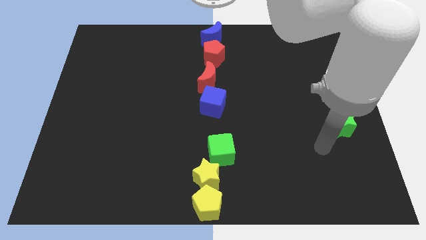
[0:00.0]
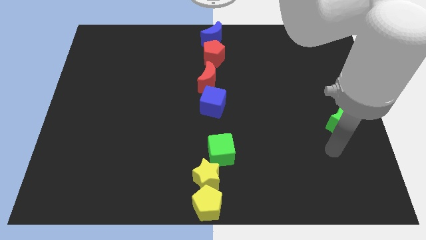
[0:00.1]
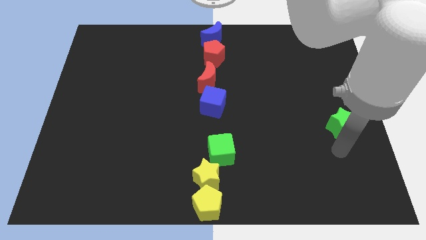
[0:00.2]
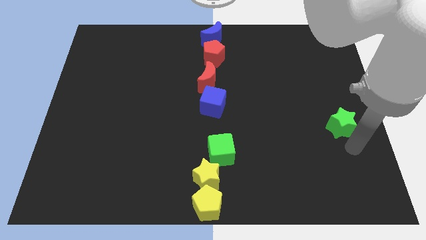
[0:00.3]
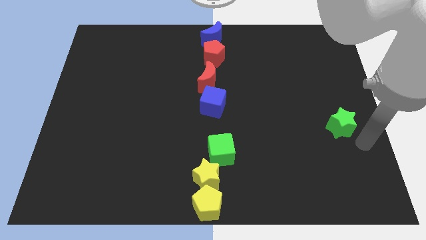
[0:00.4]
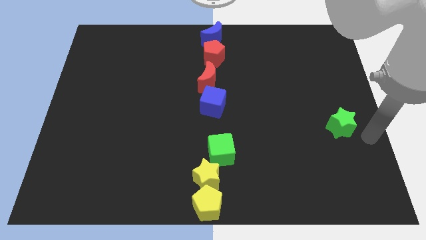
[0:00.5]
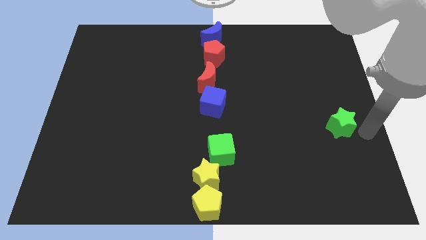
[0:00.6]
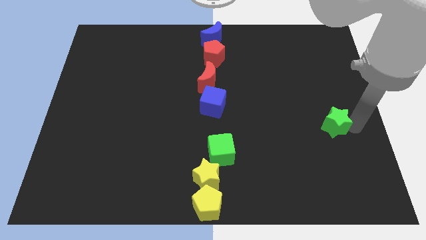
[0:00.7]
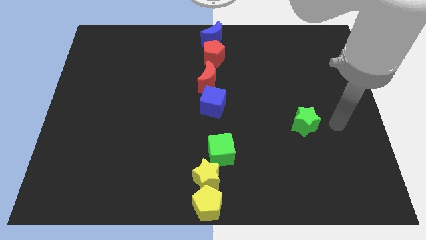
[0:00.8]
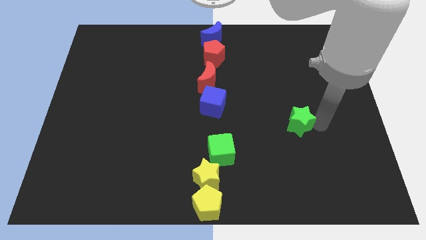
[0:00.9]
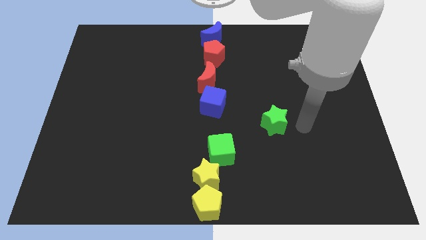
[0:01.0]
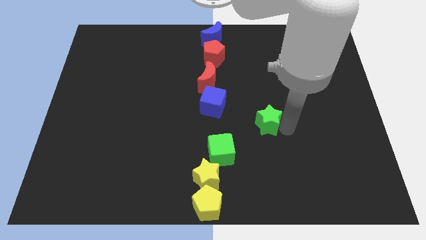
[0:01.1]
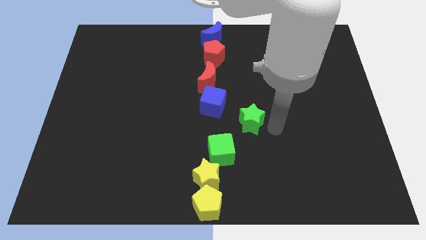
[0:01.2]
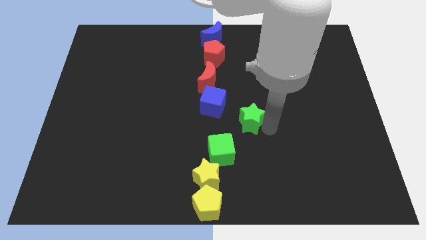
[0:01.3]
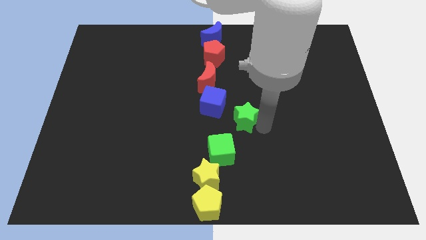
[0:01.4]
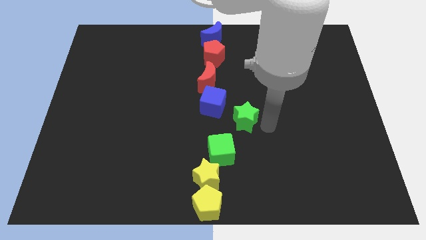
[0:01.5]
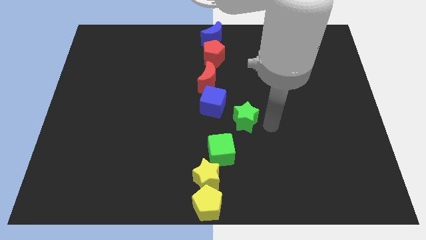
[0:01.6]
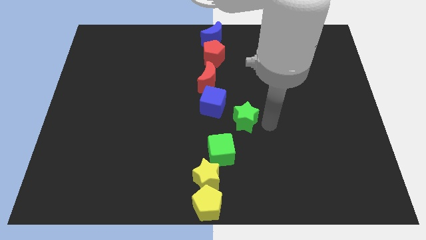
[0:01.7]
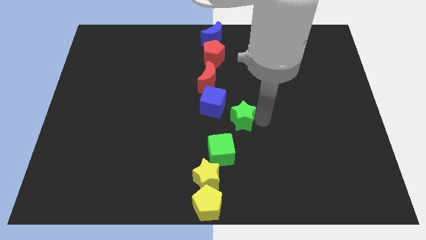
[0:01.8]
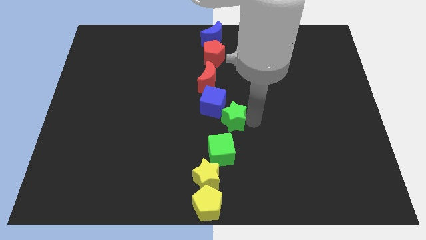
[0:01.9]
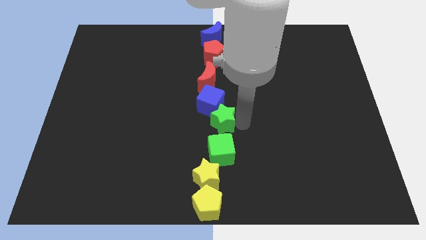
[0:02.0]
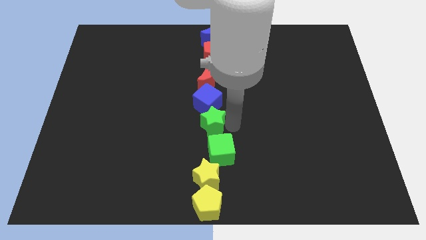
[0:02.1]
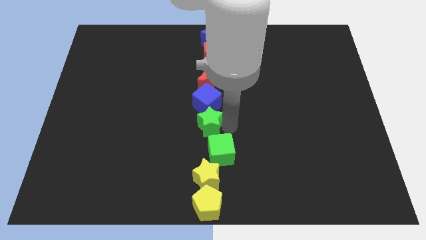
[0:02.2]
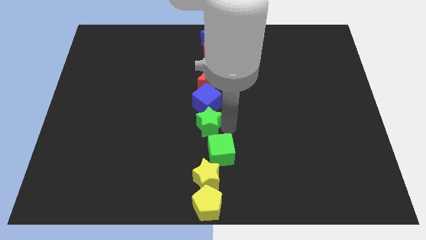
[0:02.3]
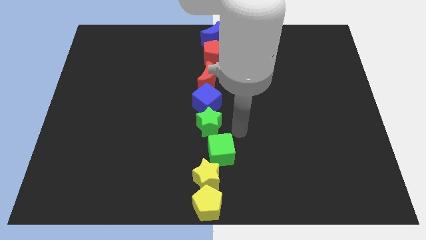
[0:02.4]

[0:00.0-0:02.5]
place green star below blue cube

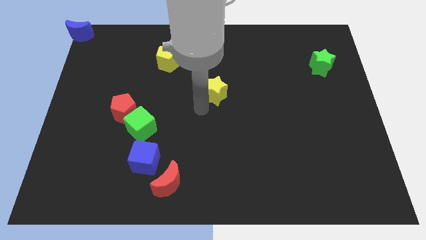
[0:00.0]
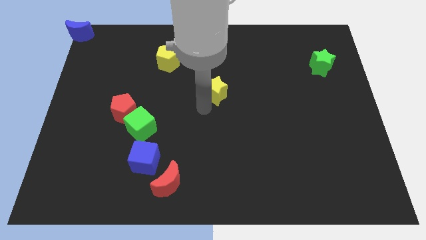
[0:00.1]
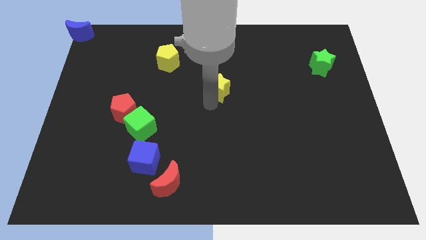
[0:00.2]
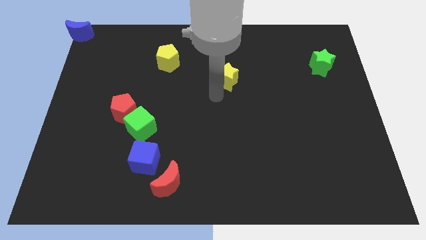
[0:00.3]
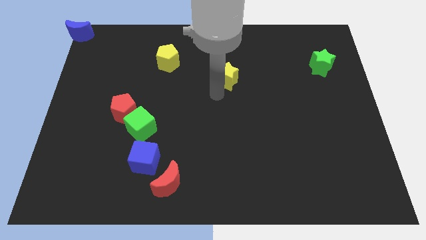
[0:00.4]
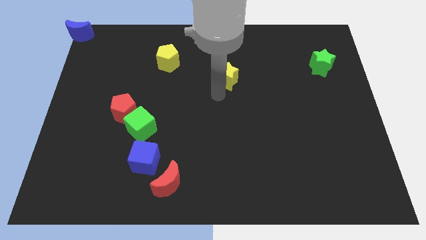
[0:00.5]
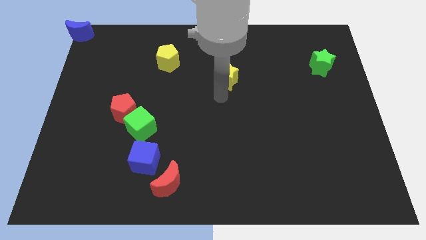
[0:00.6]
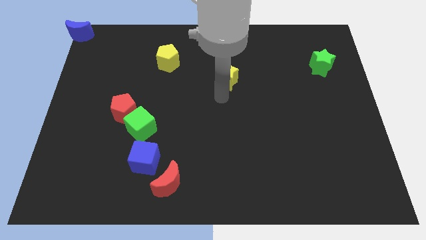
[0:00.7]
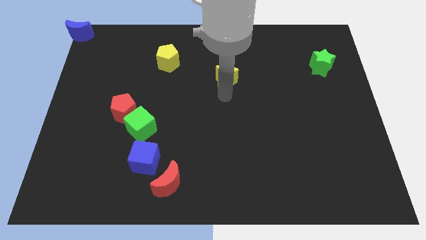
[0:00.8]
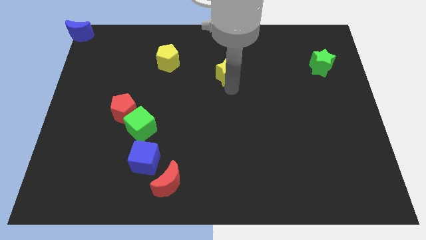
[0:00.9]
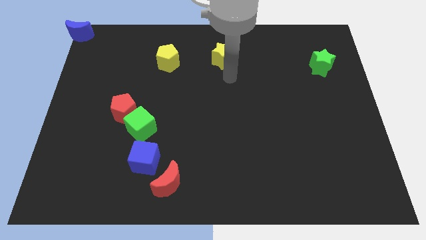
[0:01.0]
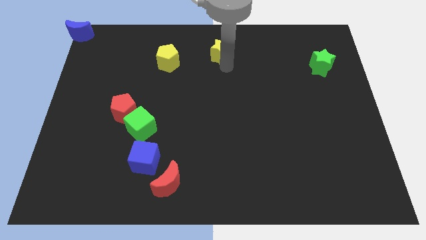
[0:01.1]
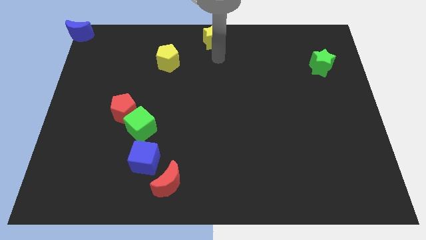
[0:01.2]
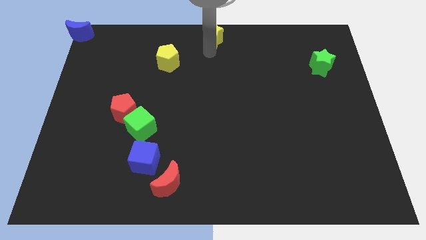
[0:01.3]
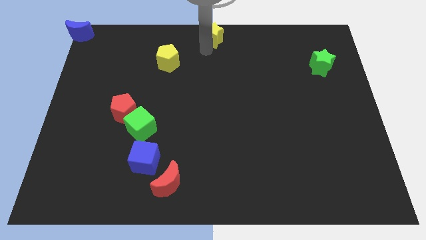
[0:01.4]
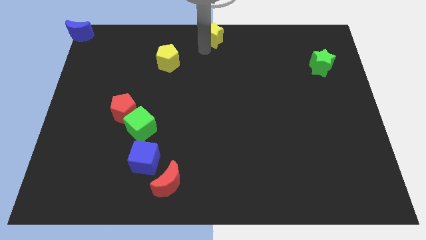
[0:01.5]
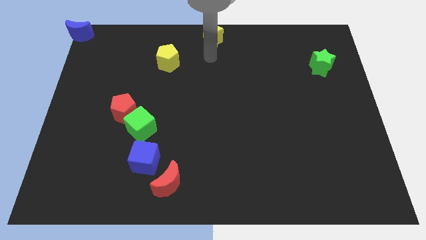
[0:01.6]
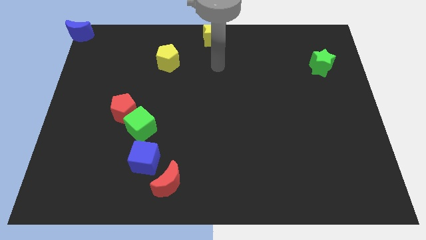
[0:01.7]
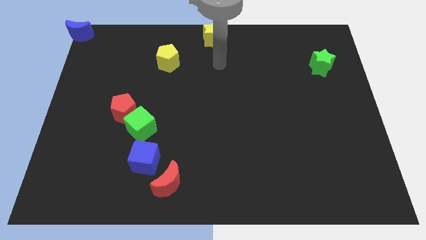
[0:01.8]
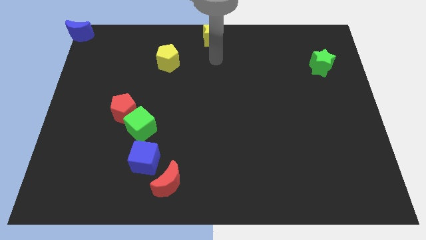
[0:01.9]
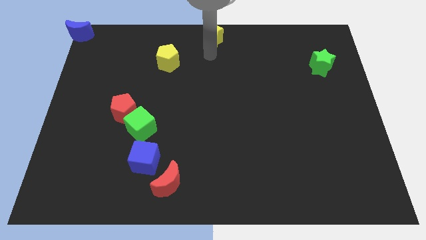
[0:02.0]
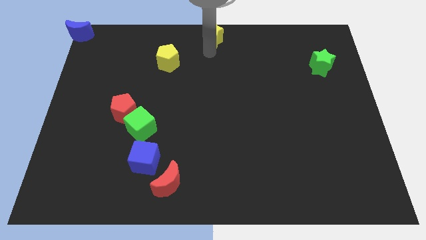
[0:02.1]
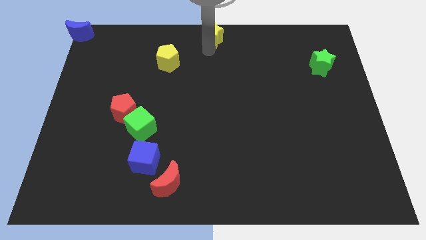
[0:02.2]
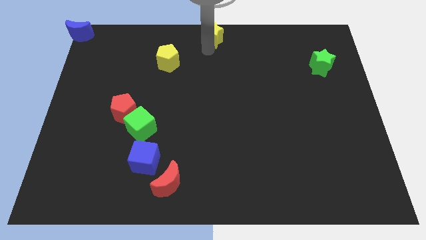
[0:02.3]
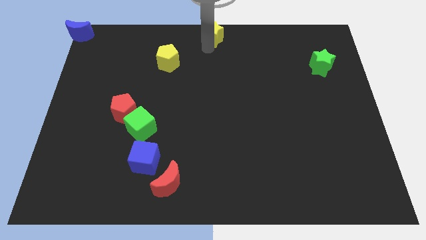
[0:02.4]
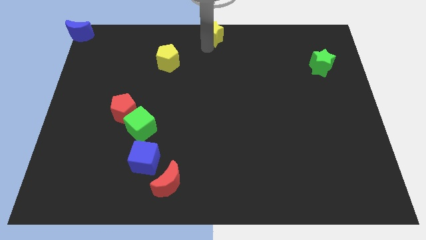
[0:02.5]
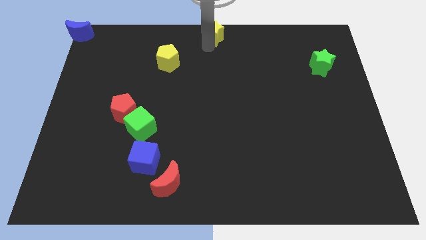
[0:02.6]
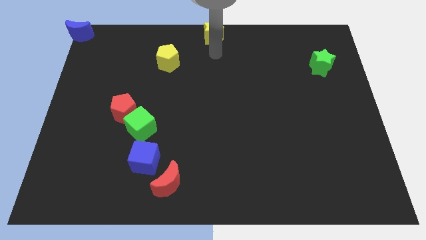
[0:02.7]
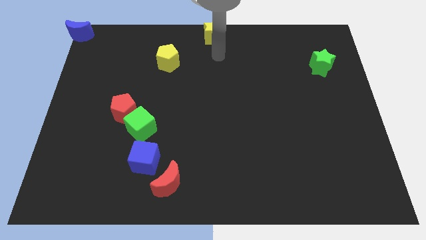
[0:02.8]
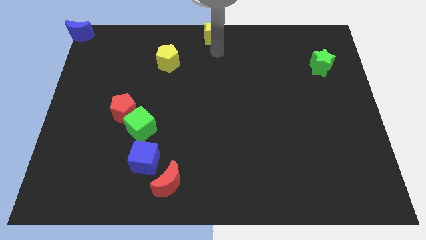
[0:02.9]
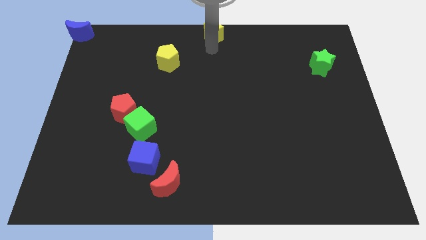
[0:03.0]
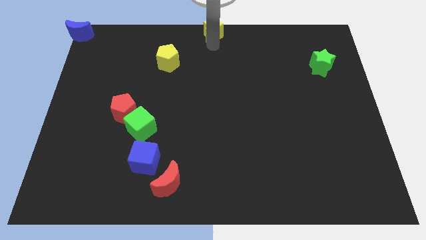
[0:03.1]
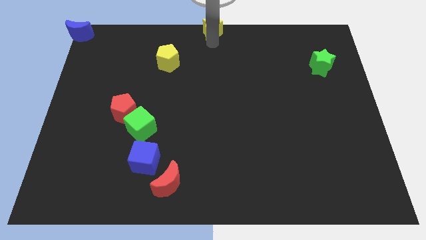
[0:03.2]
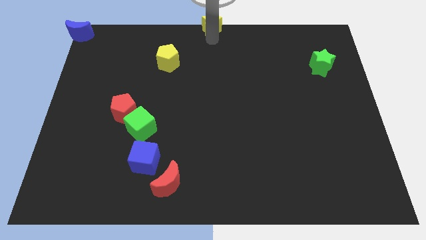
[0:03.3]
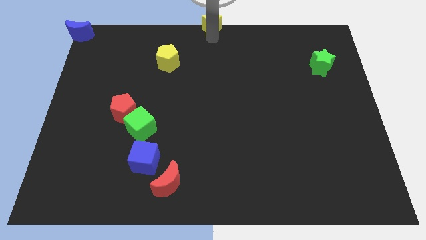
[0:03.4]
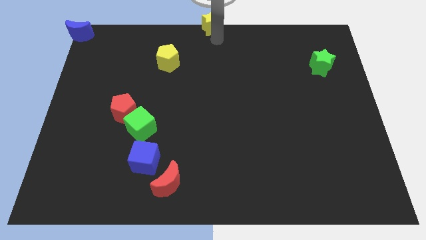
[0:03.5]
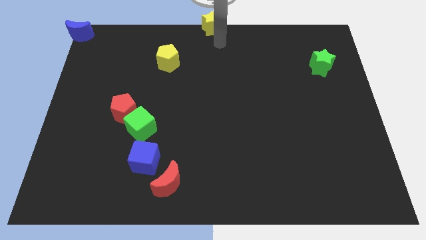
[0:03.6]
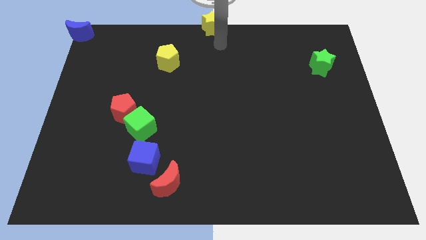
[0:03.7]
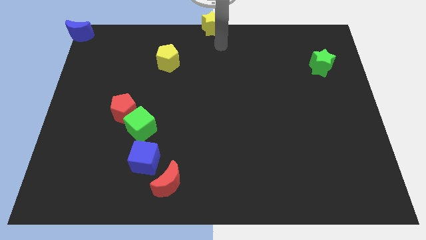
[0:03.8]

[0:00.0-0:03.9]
put the yellow star at the top center of the board

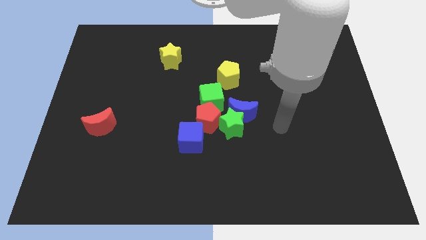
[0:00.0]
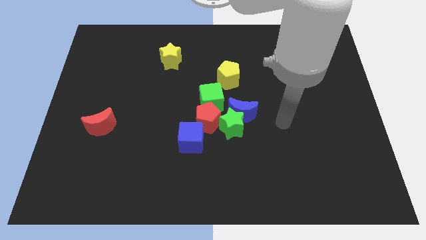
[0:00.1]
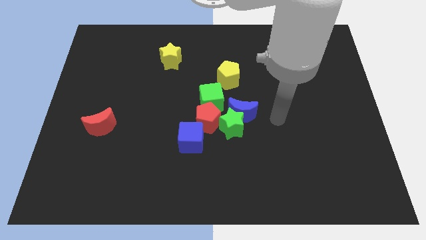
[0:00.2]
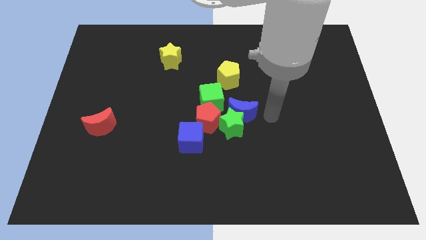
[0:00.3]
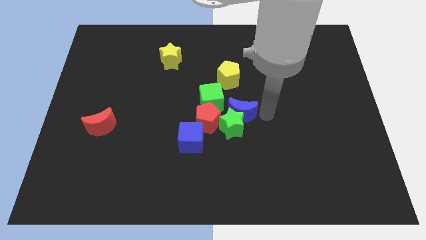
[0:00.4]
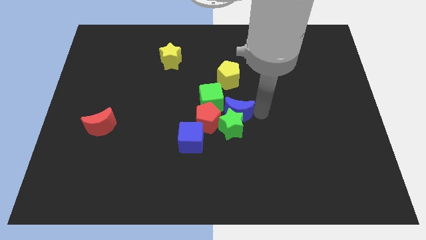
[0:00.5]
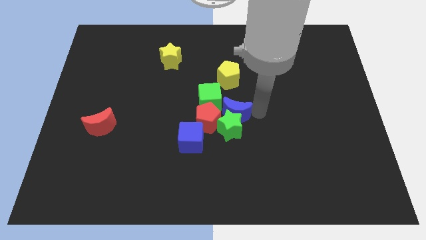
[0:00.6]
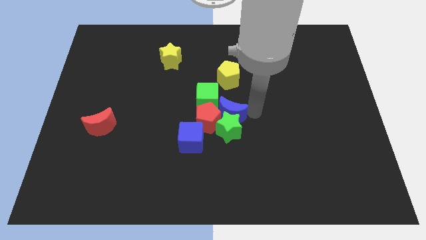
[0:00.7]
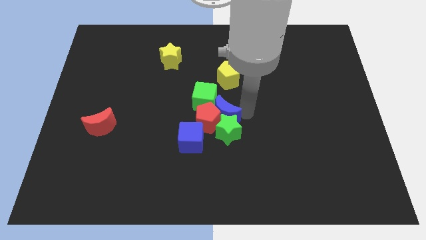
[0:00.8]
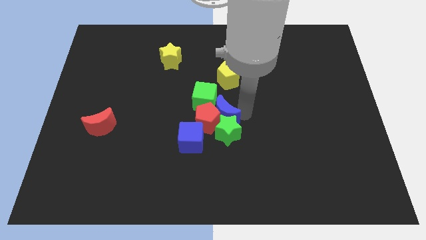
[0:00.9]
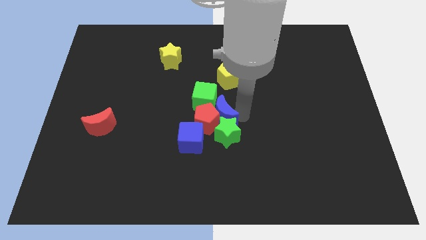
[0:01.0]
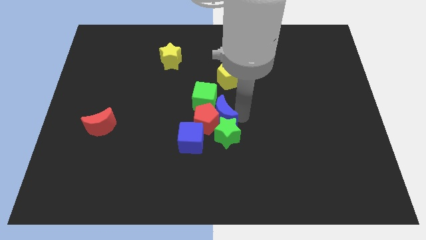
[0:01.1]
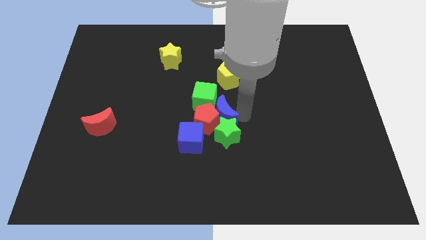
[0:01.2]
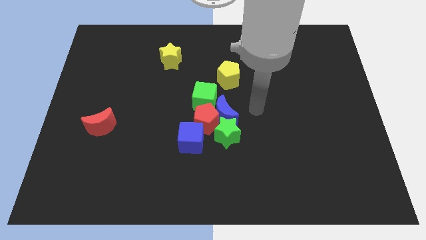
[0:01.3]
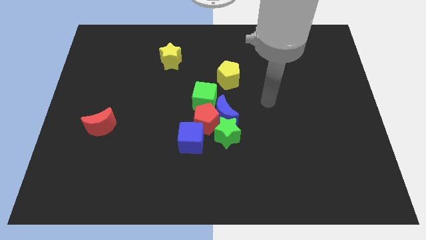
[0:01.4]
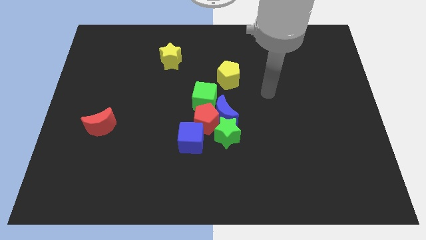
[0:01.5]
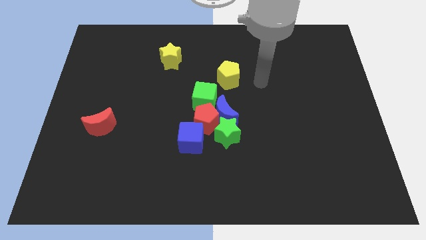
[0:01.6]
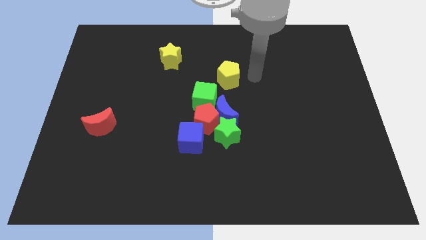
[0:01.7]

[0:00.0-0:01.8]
push the blue crescent into the center

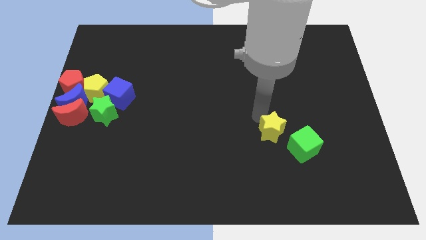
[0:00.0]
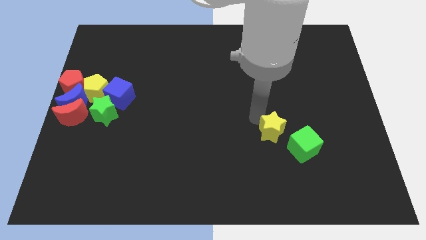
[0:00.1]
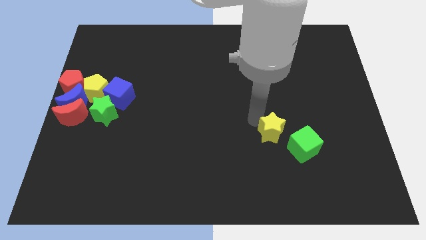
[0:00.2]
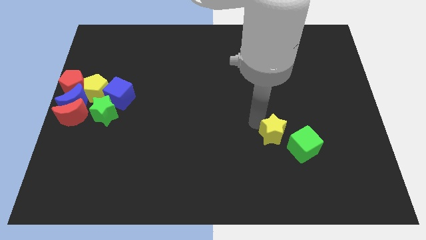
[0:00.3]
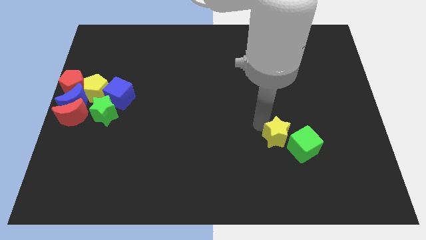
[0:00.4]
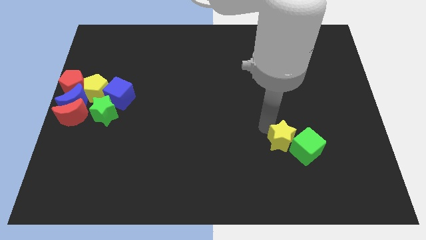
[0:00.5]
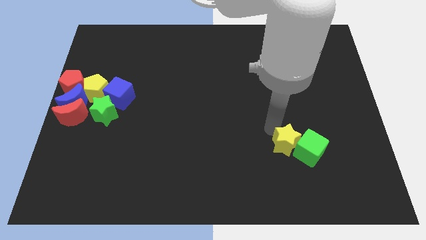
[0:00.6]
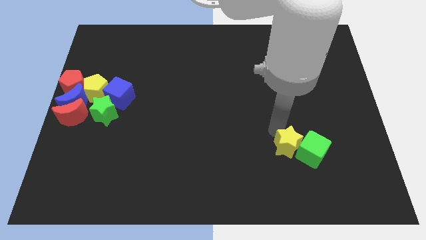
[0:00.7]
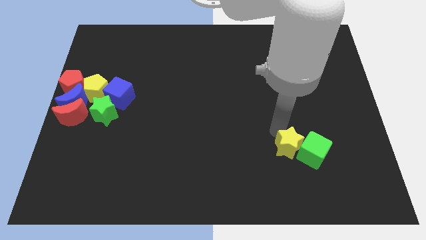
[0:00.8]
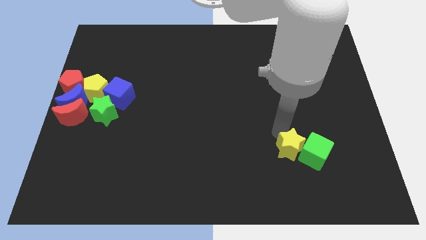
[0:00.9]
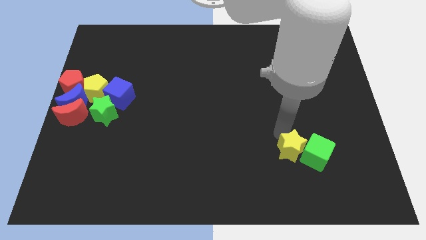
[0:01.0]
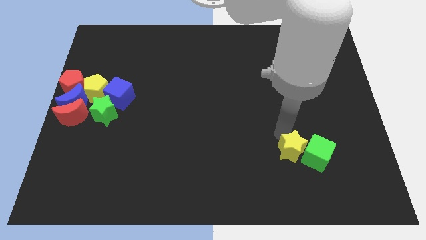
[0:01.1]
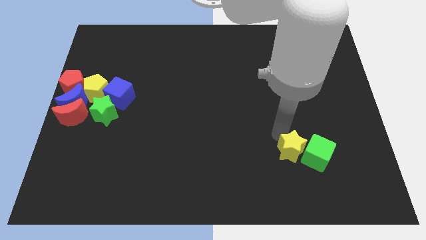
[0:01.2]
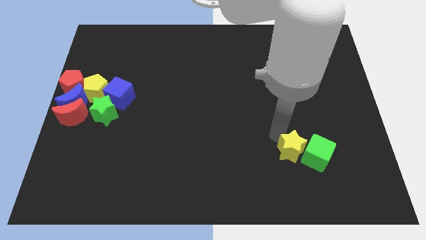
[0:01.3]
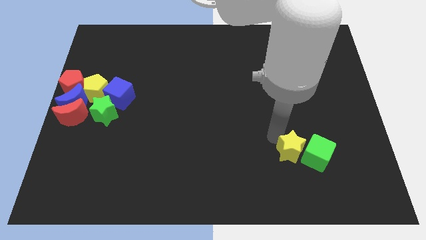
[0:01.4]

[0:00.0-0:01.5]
push the yellow star into the green cube
